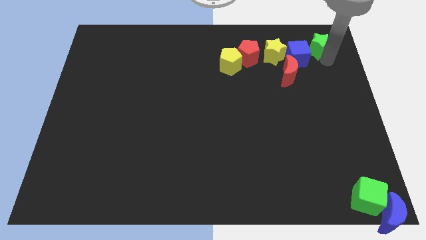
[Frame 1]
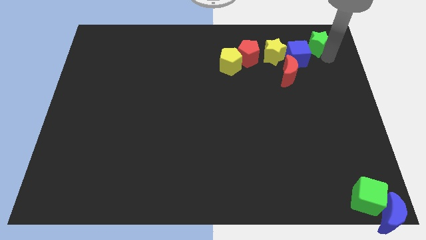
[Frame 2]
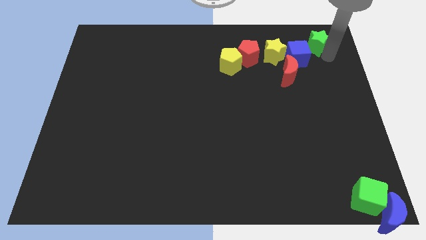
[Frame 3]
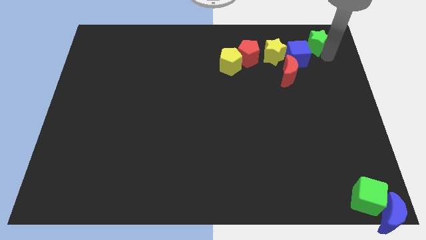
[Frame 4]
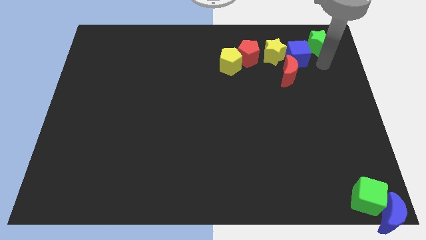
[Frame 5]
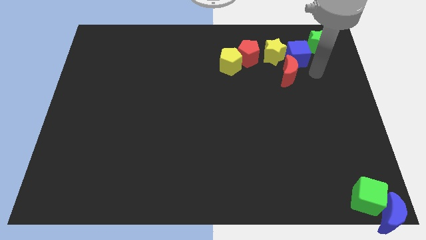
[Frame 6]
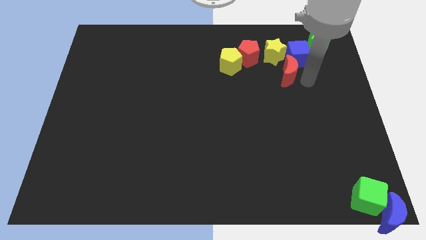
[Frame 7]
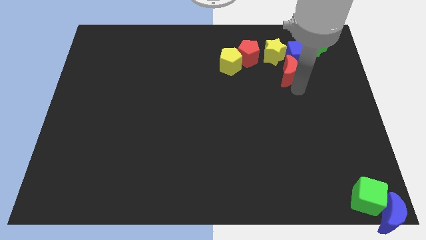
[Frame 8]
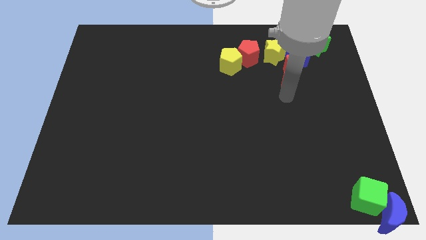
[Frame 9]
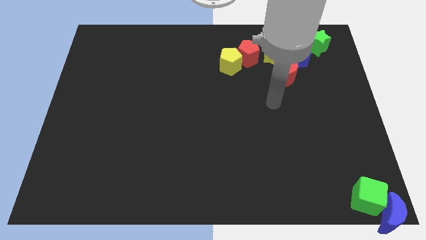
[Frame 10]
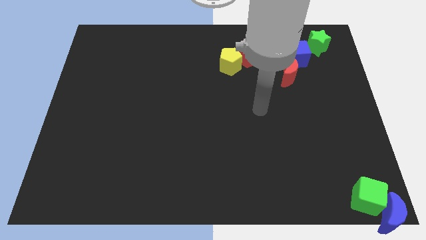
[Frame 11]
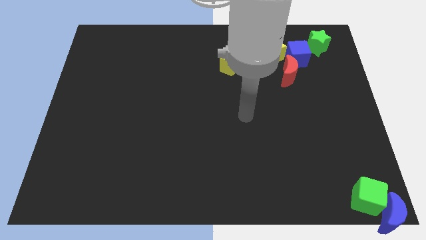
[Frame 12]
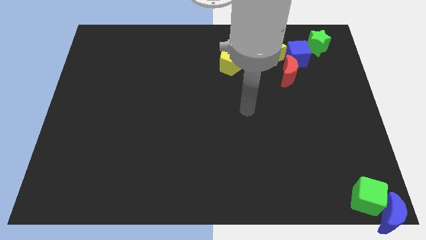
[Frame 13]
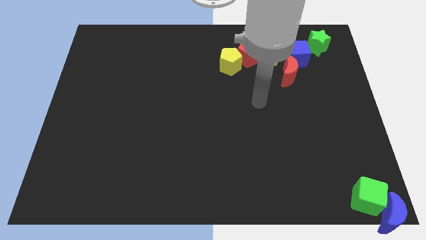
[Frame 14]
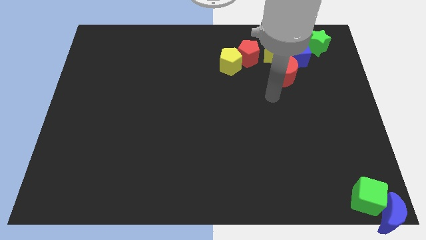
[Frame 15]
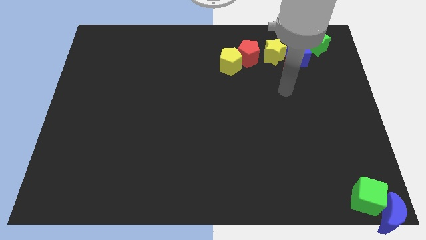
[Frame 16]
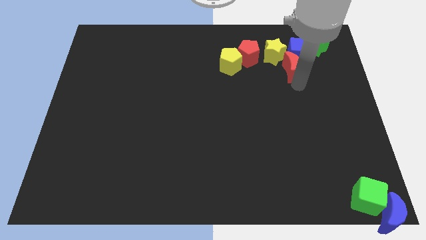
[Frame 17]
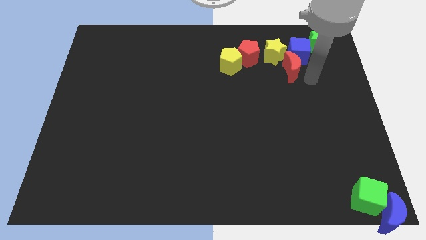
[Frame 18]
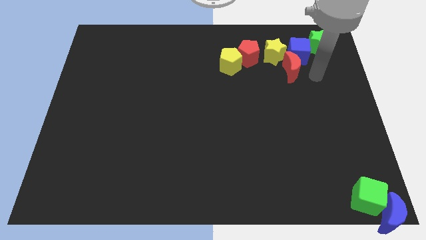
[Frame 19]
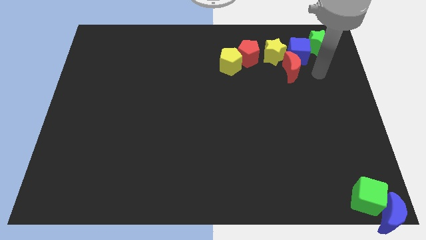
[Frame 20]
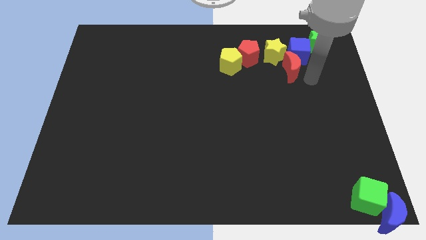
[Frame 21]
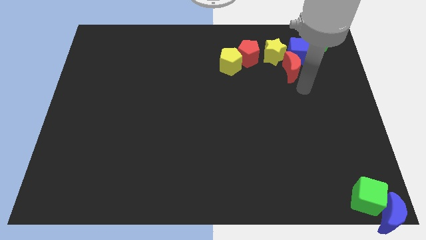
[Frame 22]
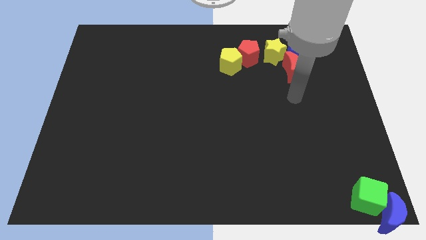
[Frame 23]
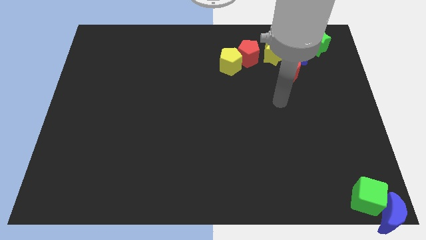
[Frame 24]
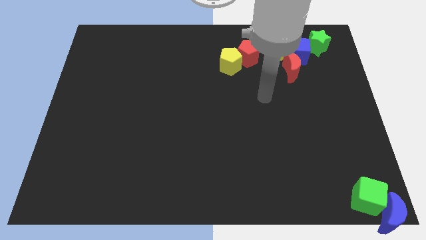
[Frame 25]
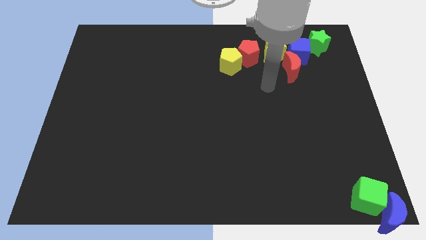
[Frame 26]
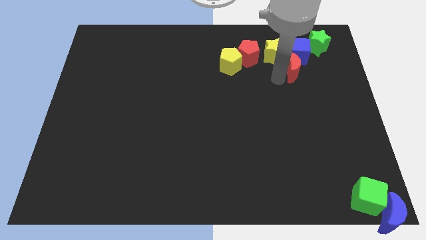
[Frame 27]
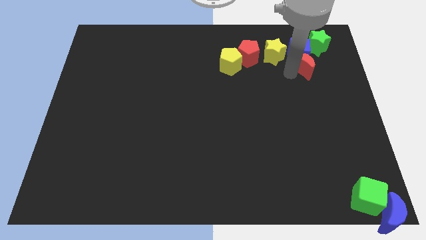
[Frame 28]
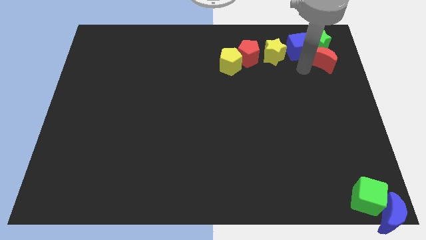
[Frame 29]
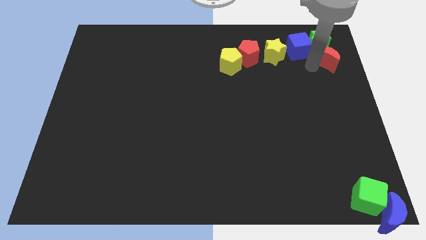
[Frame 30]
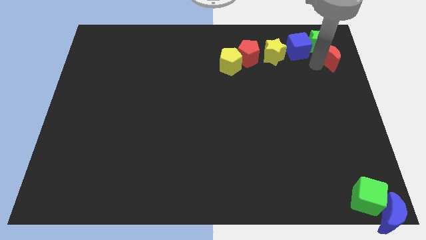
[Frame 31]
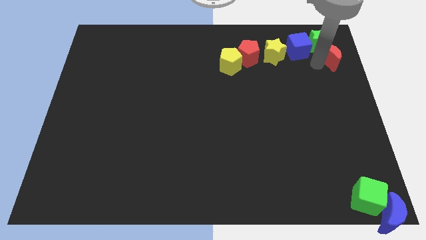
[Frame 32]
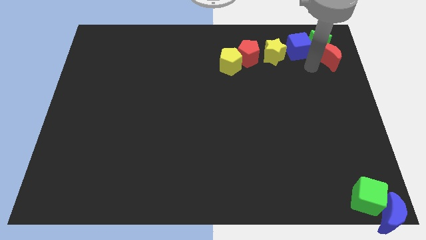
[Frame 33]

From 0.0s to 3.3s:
place the red crescent below the green star

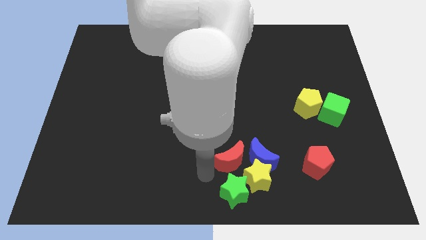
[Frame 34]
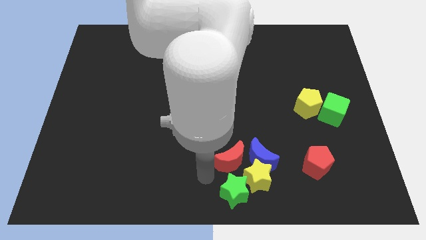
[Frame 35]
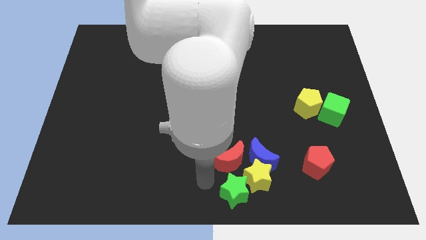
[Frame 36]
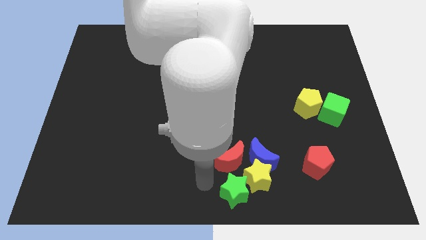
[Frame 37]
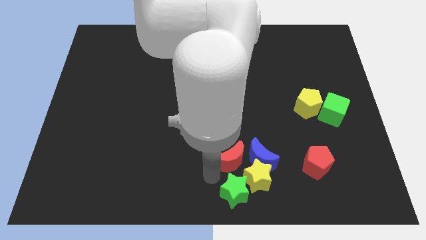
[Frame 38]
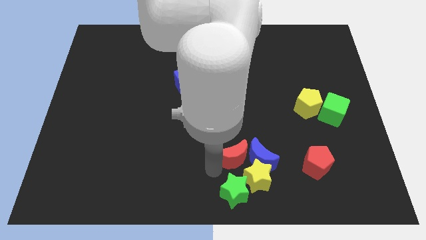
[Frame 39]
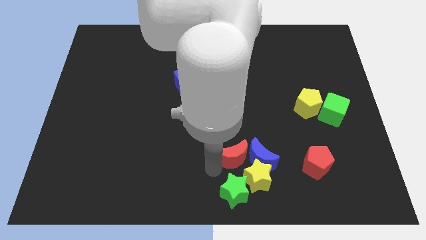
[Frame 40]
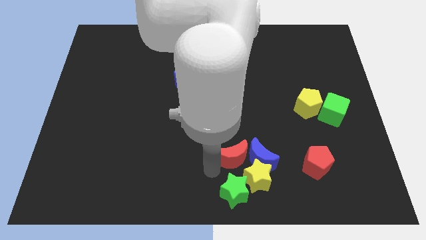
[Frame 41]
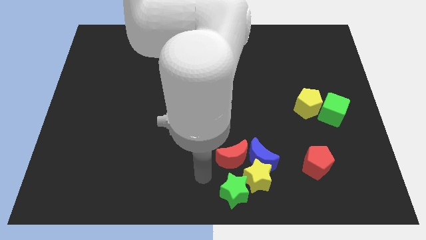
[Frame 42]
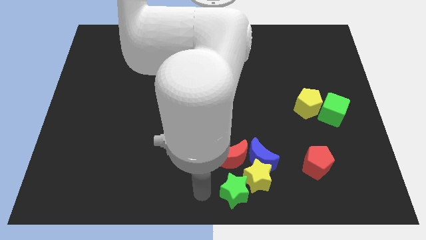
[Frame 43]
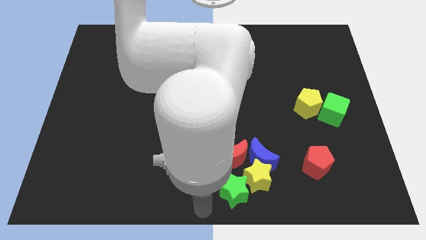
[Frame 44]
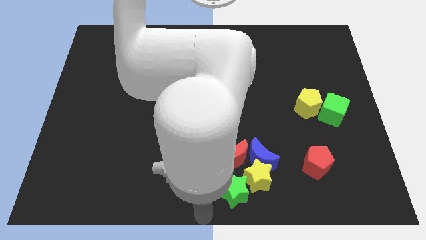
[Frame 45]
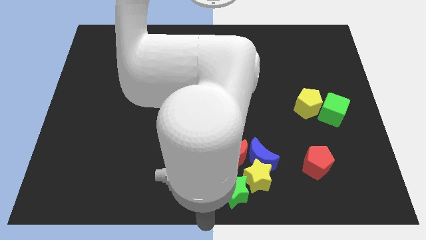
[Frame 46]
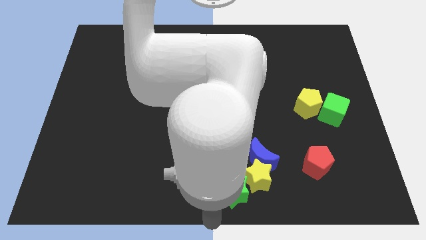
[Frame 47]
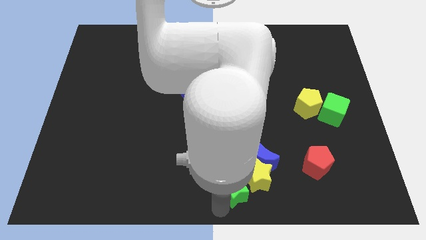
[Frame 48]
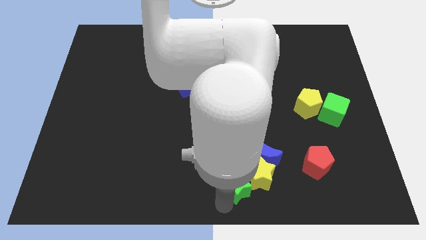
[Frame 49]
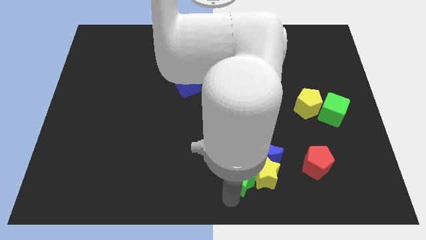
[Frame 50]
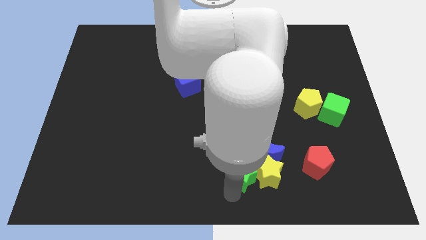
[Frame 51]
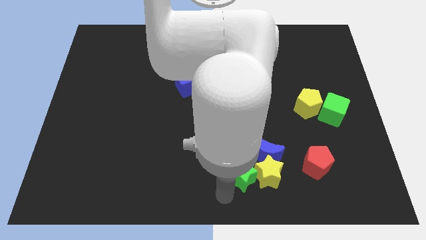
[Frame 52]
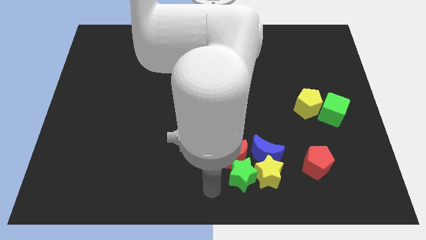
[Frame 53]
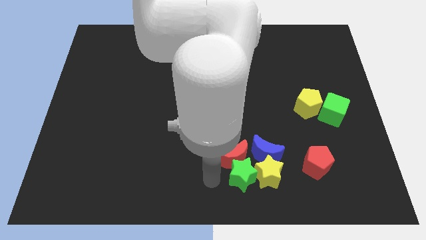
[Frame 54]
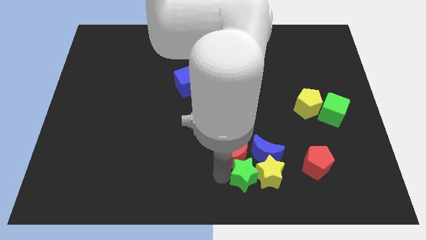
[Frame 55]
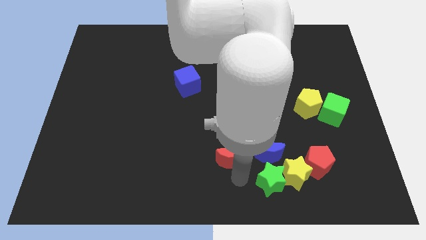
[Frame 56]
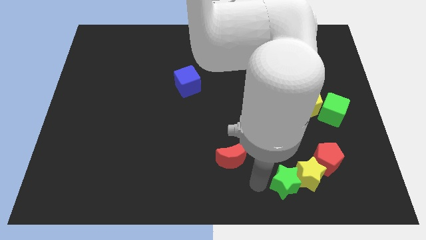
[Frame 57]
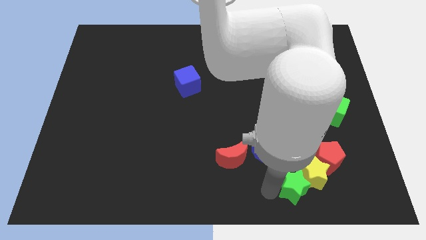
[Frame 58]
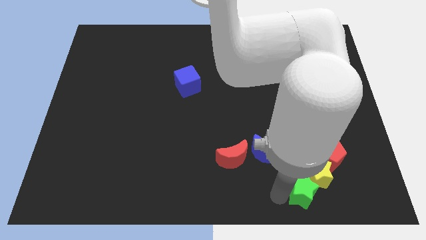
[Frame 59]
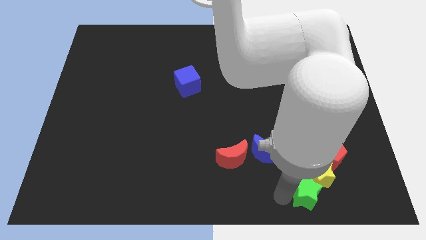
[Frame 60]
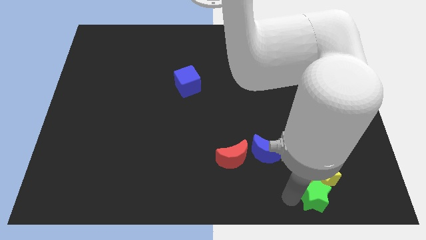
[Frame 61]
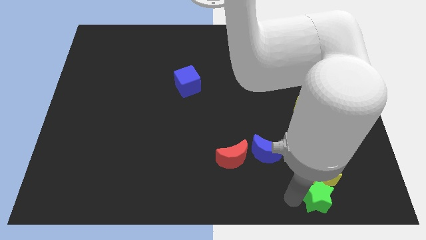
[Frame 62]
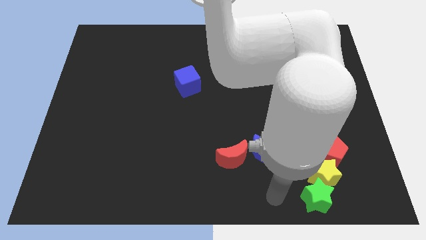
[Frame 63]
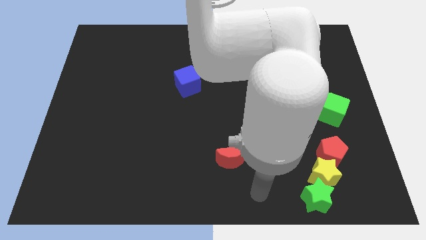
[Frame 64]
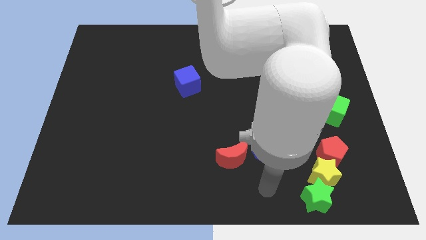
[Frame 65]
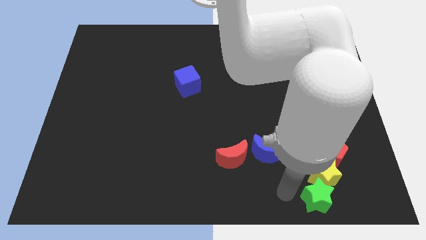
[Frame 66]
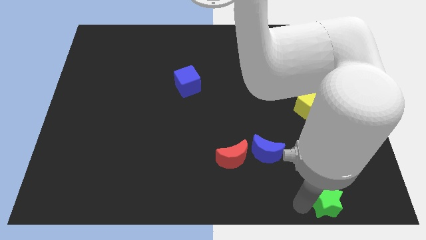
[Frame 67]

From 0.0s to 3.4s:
separate crescents from a group of blocks

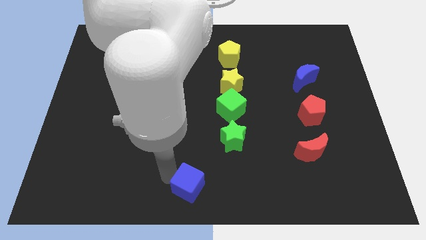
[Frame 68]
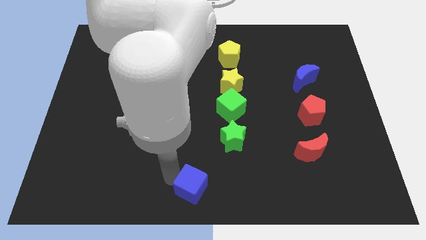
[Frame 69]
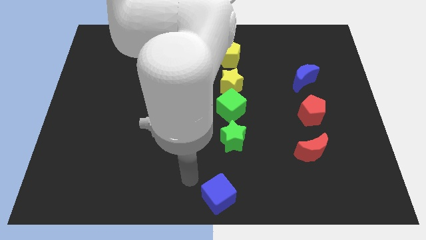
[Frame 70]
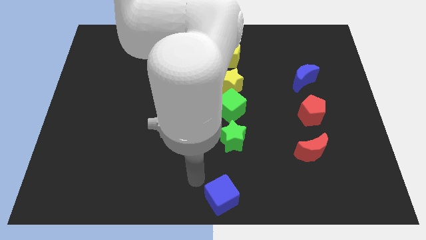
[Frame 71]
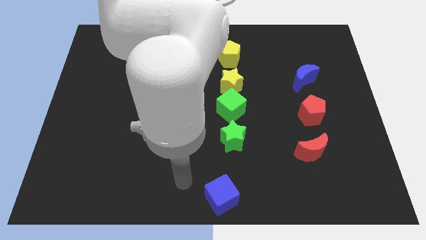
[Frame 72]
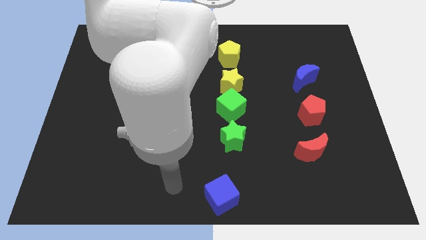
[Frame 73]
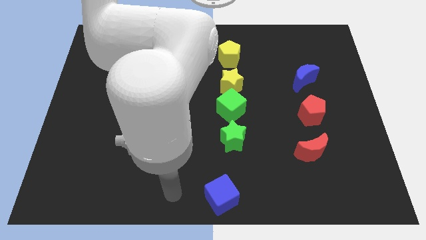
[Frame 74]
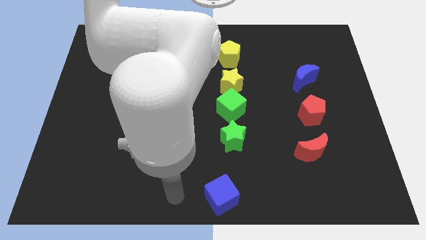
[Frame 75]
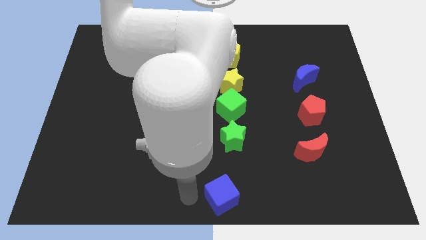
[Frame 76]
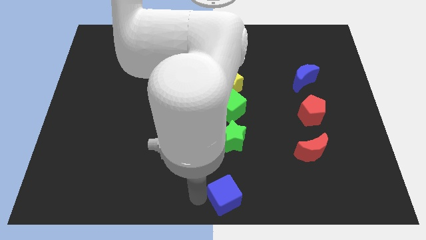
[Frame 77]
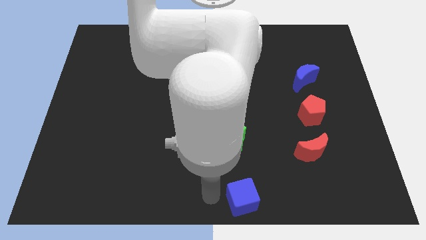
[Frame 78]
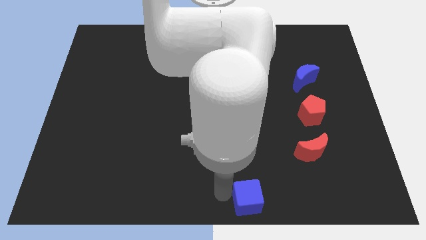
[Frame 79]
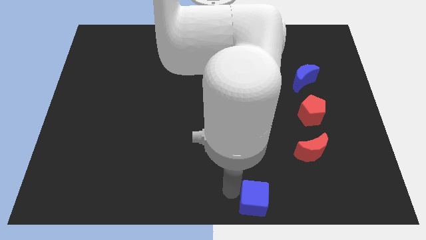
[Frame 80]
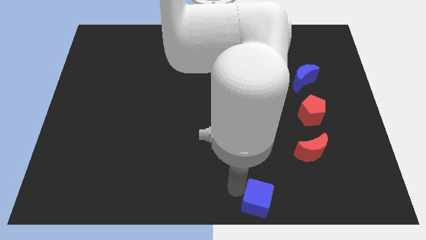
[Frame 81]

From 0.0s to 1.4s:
place the blue cube diagonally to red moon

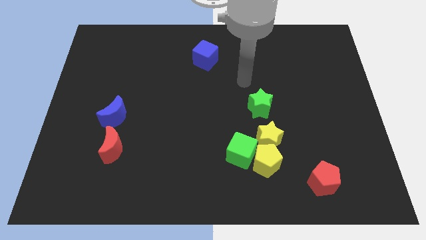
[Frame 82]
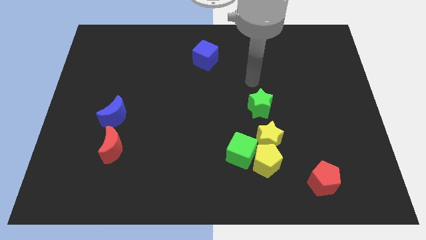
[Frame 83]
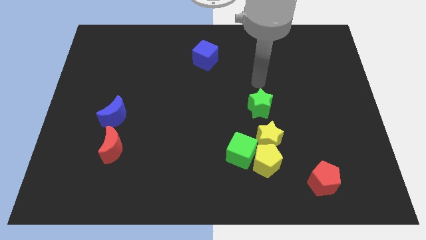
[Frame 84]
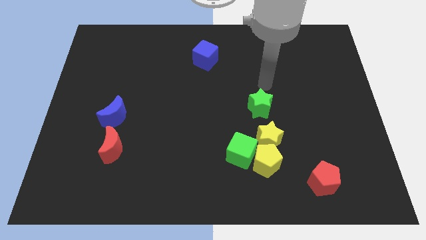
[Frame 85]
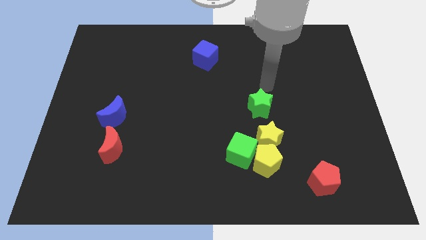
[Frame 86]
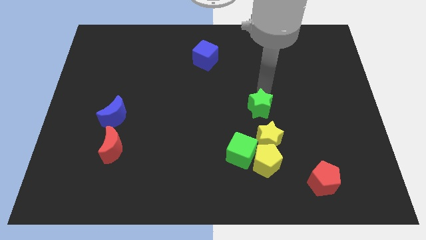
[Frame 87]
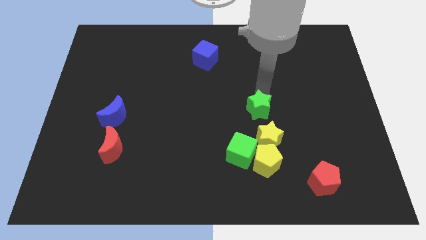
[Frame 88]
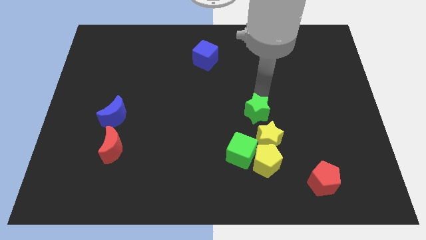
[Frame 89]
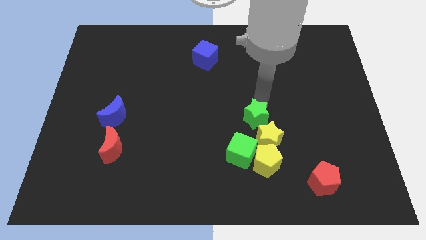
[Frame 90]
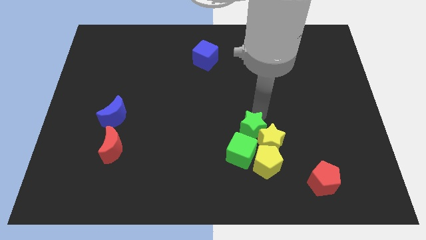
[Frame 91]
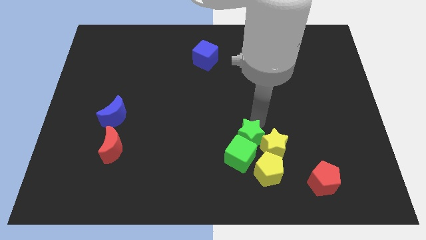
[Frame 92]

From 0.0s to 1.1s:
slide green star into green cube
